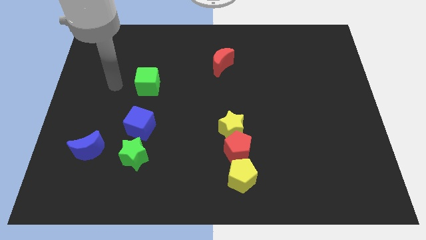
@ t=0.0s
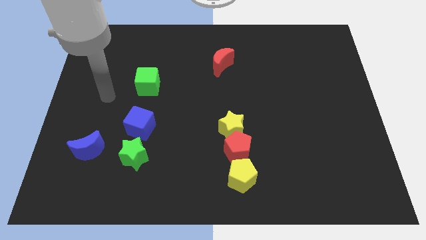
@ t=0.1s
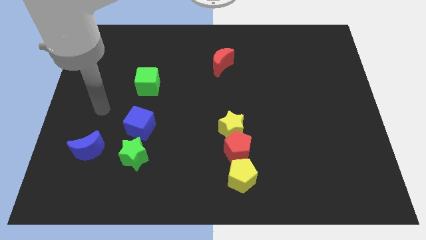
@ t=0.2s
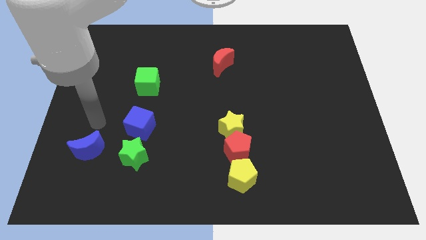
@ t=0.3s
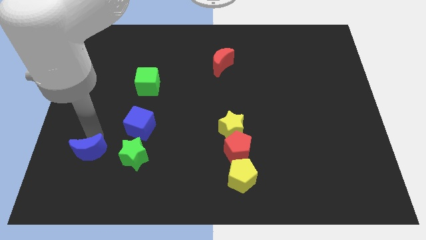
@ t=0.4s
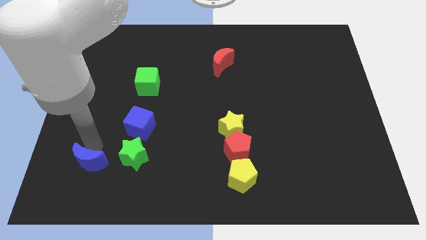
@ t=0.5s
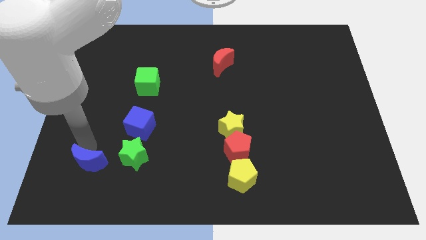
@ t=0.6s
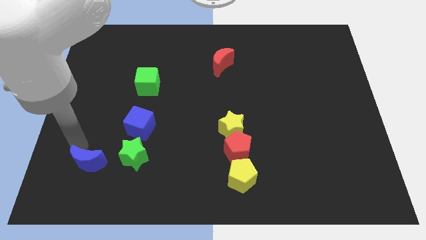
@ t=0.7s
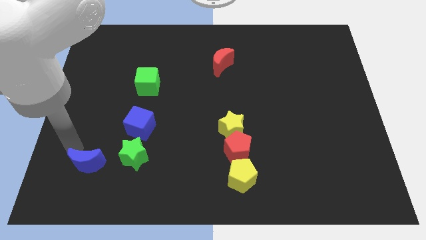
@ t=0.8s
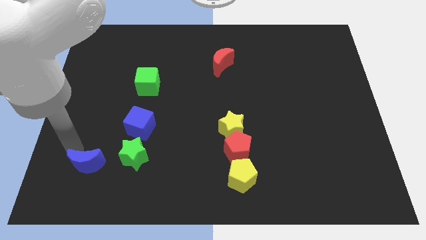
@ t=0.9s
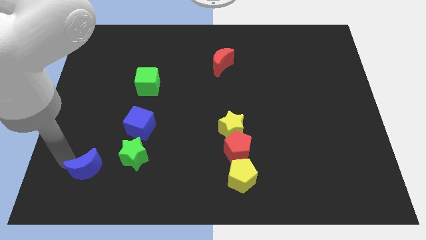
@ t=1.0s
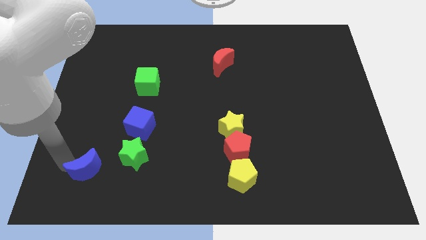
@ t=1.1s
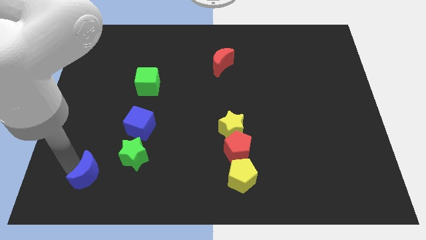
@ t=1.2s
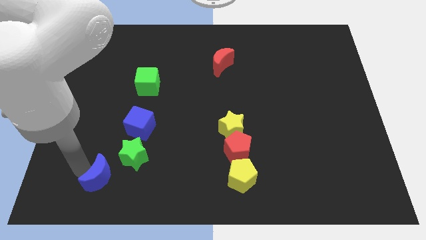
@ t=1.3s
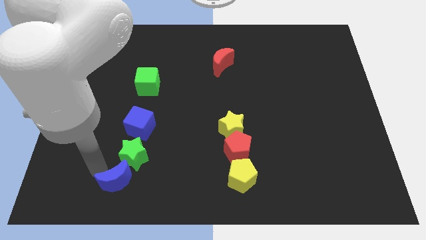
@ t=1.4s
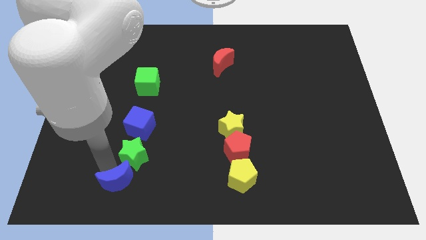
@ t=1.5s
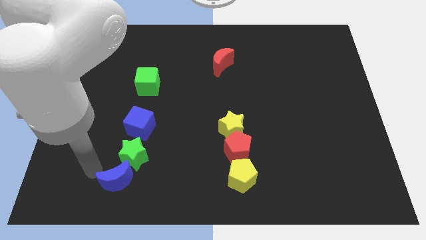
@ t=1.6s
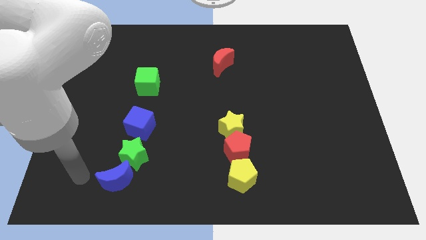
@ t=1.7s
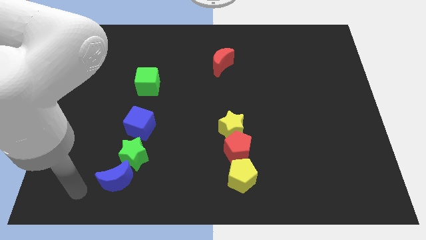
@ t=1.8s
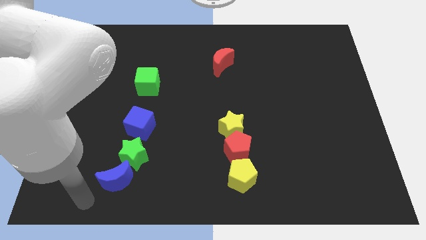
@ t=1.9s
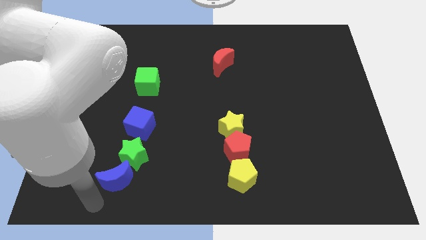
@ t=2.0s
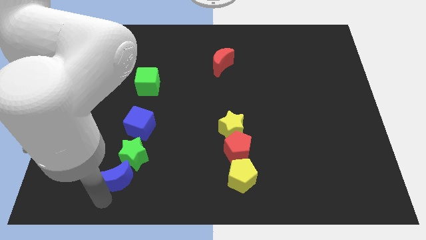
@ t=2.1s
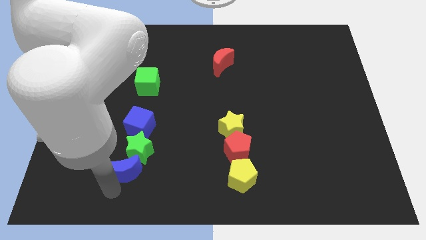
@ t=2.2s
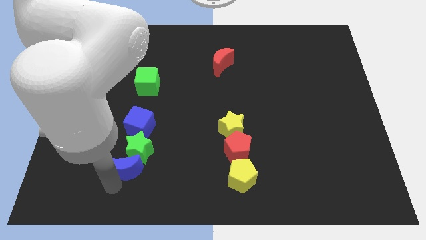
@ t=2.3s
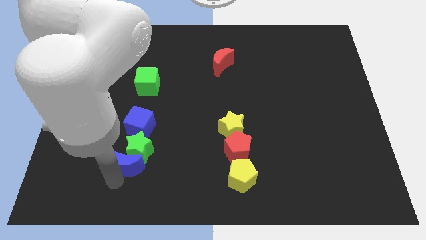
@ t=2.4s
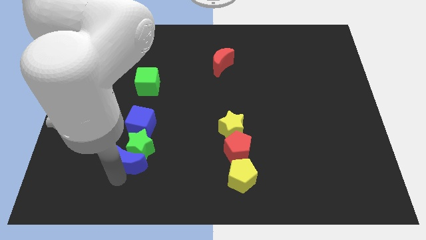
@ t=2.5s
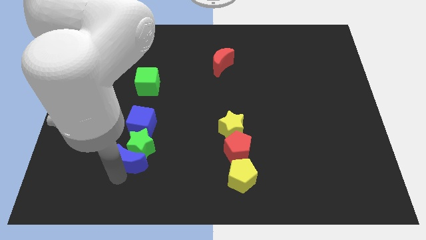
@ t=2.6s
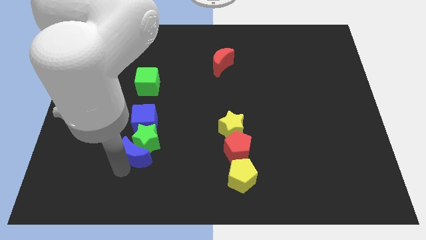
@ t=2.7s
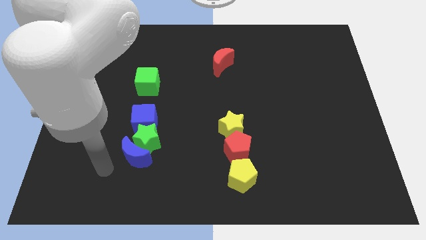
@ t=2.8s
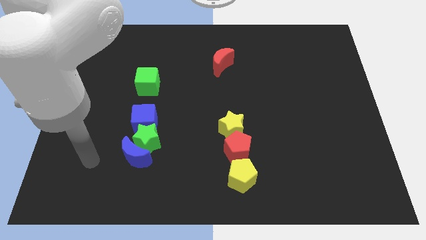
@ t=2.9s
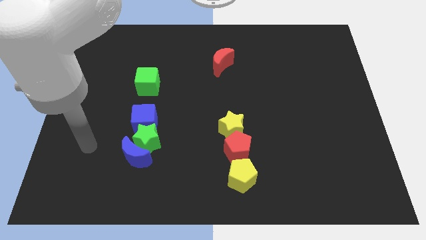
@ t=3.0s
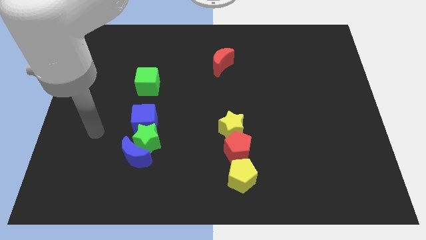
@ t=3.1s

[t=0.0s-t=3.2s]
push the blue crescent into the green star

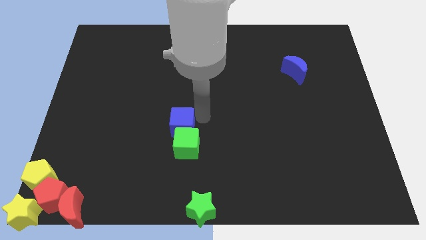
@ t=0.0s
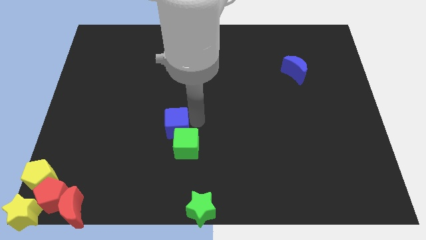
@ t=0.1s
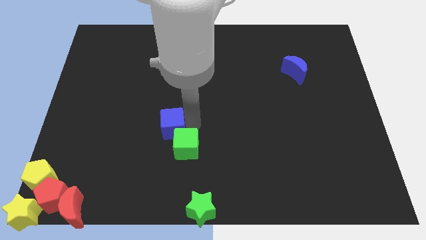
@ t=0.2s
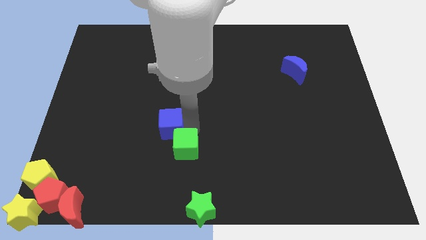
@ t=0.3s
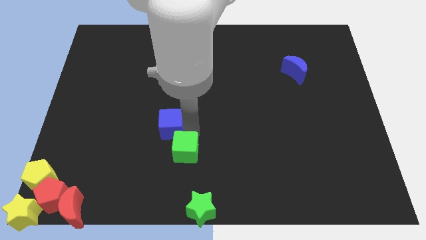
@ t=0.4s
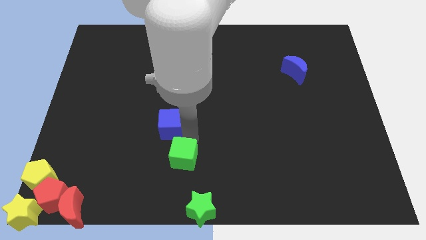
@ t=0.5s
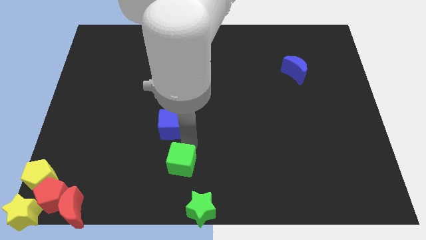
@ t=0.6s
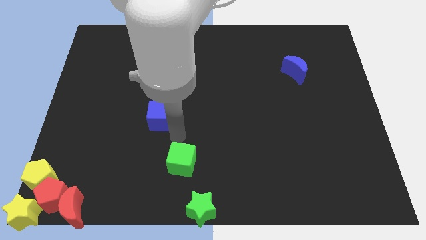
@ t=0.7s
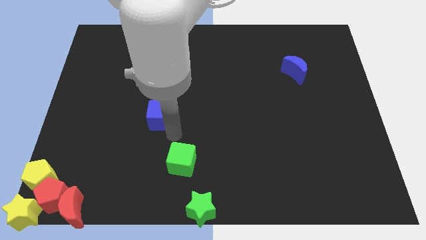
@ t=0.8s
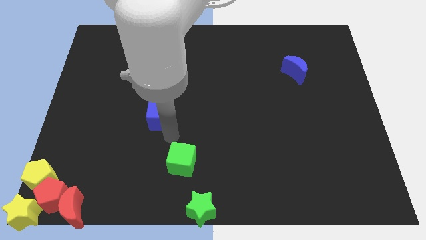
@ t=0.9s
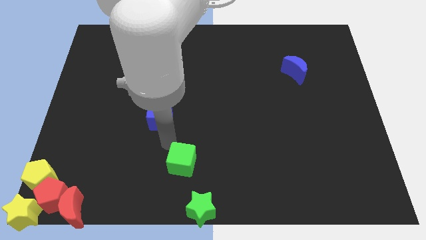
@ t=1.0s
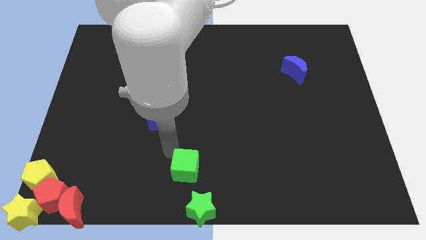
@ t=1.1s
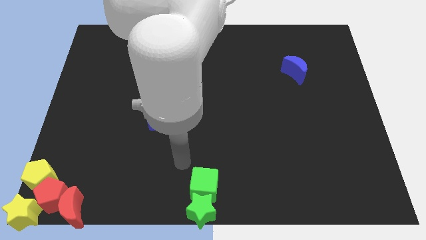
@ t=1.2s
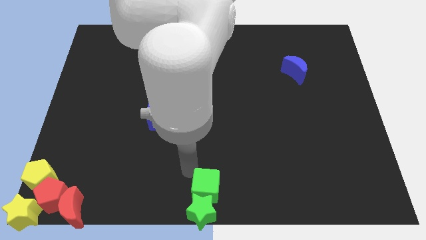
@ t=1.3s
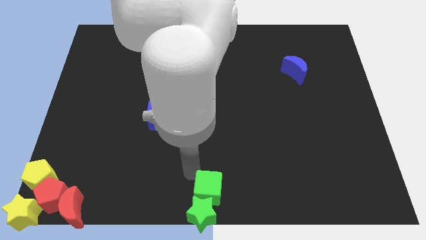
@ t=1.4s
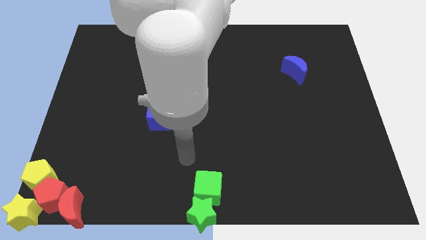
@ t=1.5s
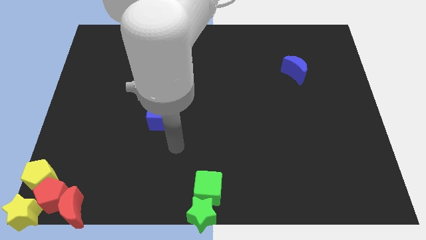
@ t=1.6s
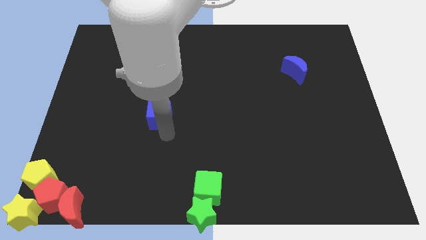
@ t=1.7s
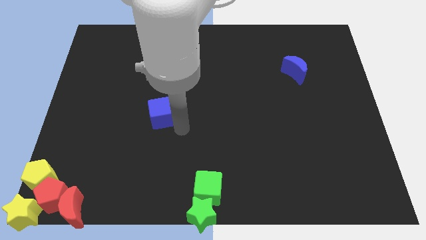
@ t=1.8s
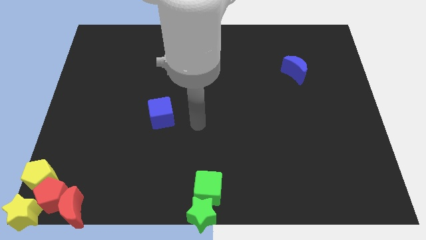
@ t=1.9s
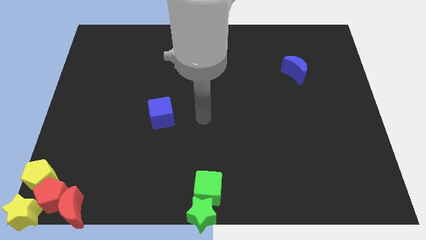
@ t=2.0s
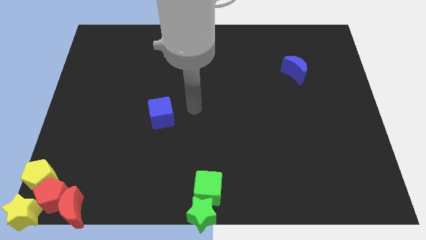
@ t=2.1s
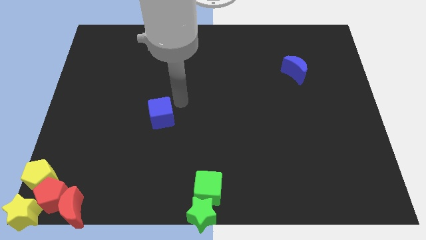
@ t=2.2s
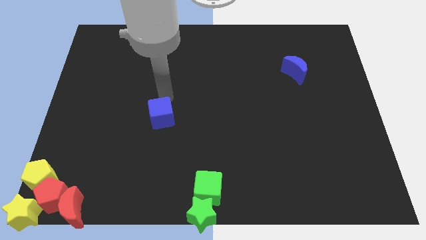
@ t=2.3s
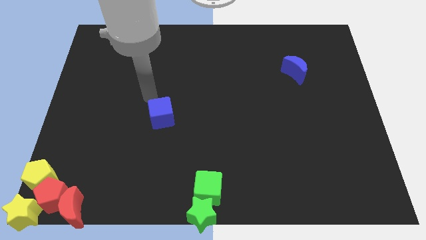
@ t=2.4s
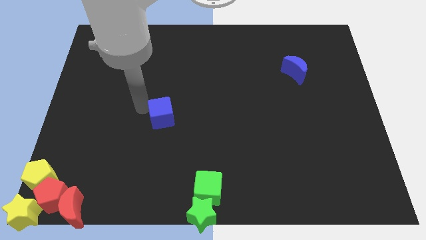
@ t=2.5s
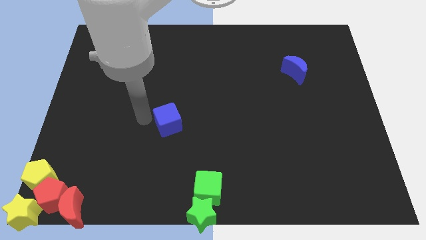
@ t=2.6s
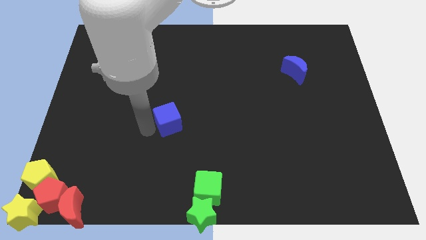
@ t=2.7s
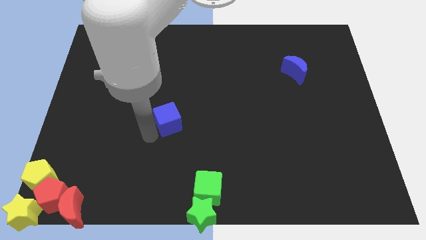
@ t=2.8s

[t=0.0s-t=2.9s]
push the green cube into the green star

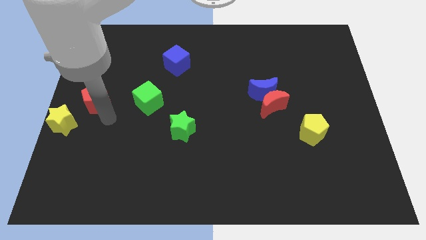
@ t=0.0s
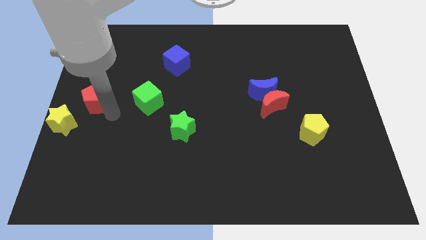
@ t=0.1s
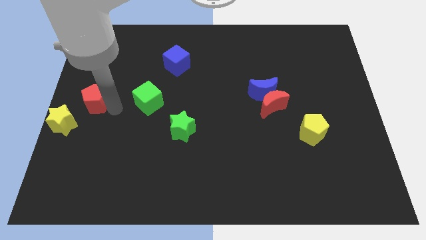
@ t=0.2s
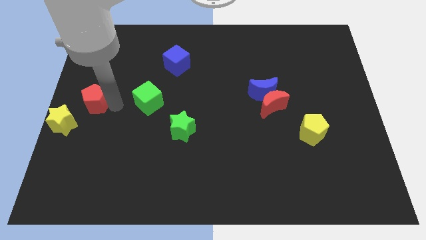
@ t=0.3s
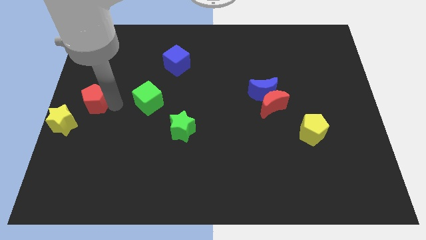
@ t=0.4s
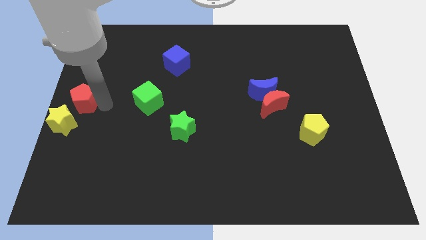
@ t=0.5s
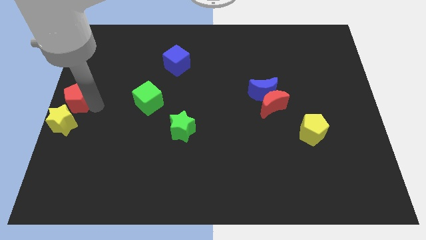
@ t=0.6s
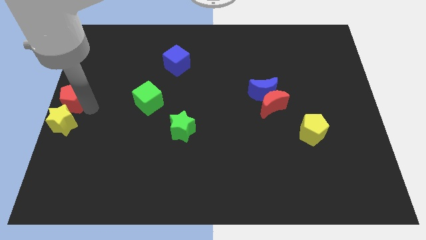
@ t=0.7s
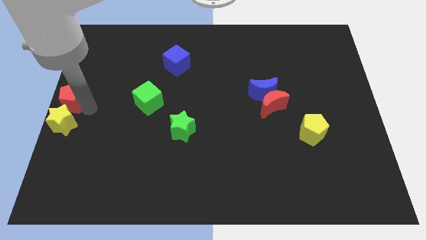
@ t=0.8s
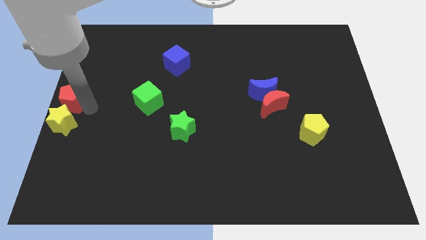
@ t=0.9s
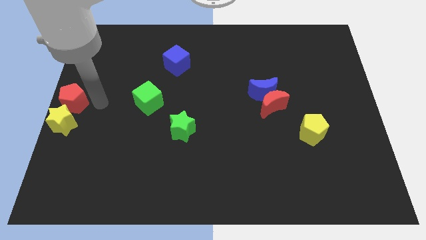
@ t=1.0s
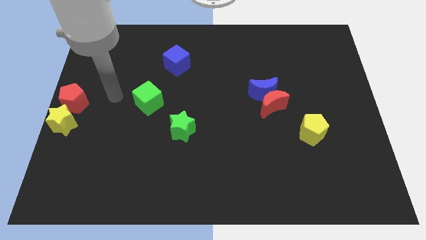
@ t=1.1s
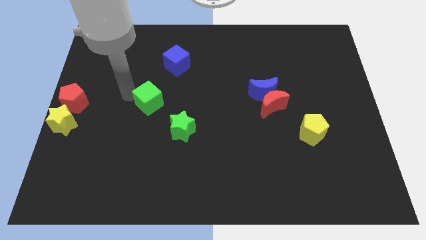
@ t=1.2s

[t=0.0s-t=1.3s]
move the red pentagon to the top right side of the yellow star

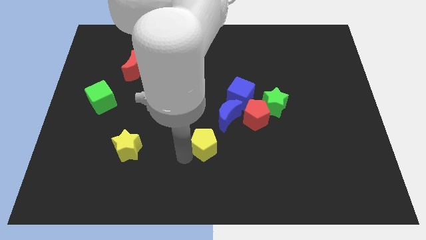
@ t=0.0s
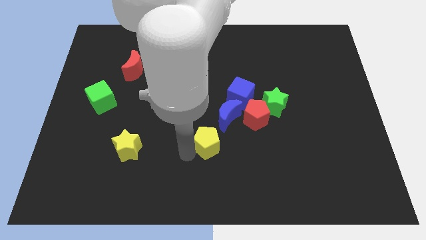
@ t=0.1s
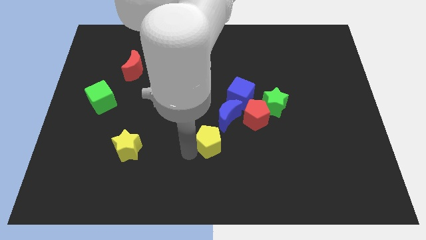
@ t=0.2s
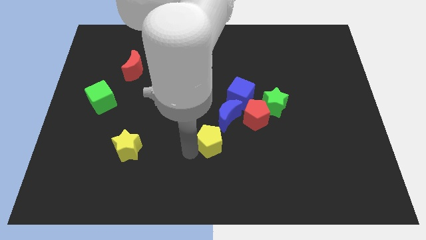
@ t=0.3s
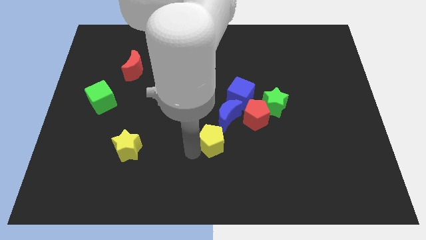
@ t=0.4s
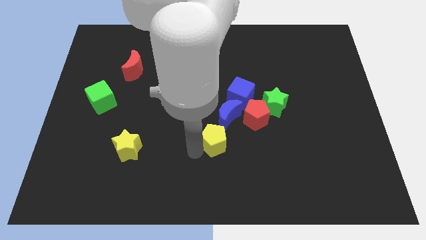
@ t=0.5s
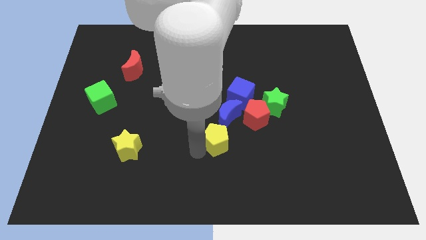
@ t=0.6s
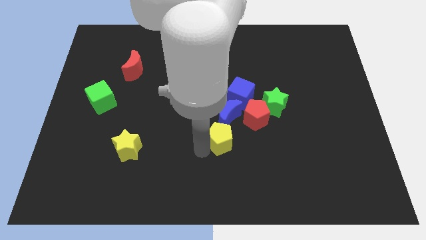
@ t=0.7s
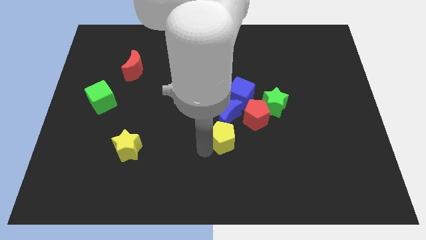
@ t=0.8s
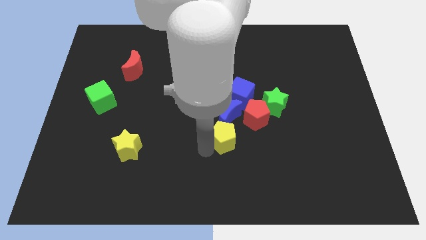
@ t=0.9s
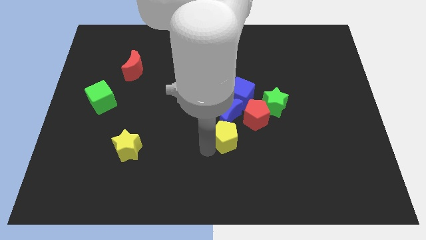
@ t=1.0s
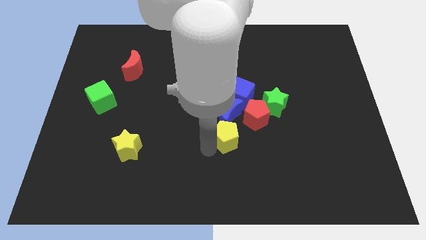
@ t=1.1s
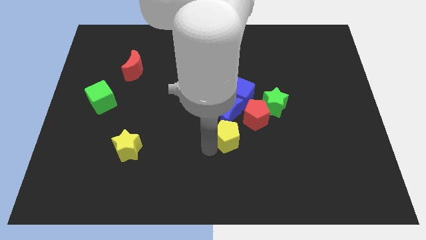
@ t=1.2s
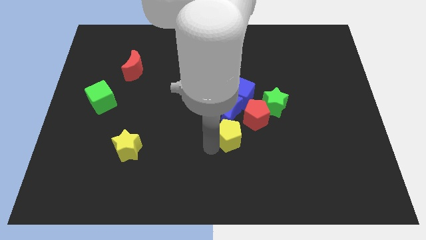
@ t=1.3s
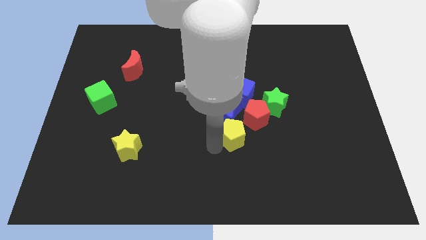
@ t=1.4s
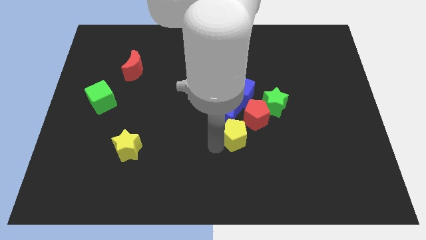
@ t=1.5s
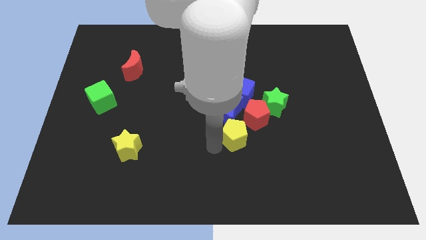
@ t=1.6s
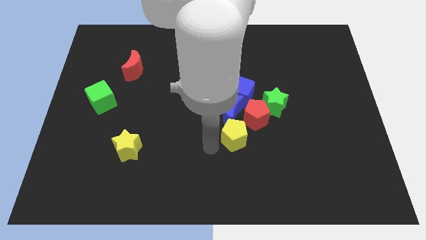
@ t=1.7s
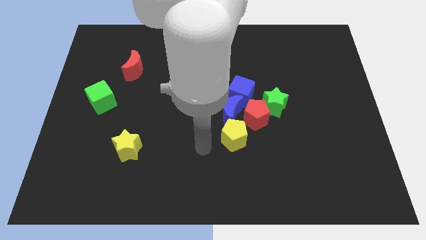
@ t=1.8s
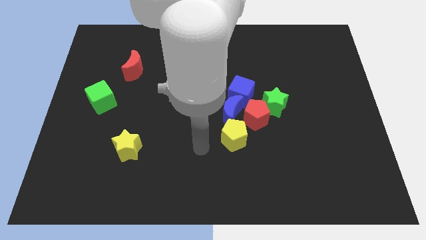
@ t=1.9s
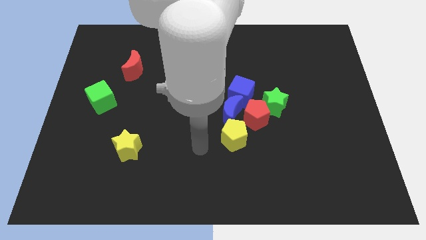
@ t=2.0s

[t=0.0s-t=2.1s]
slide yellow pentagon below the blue moon
